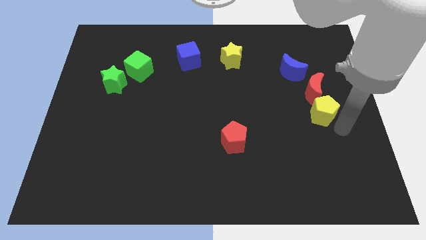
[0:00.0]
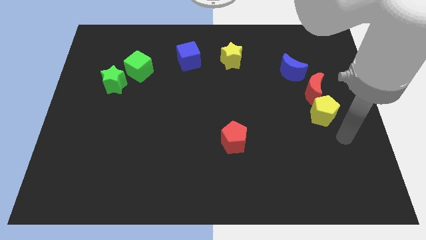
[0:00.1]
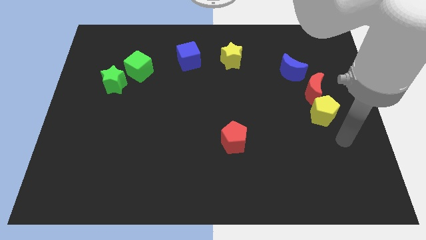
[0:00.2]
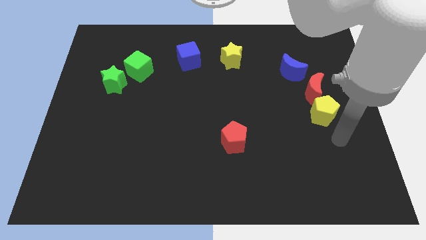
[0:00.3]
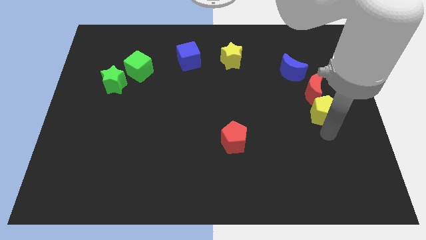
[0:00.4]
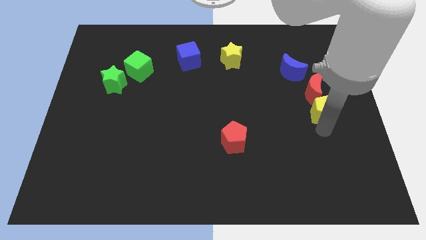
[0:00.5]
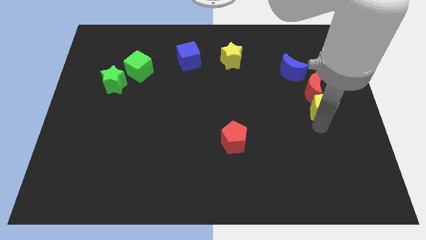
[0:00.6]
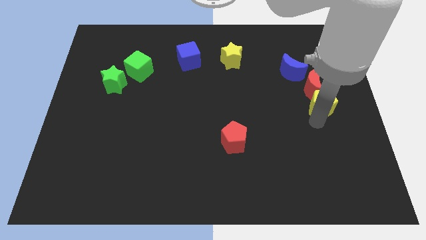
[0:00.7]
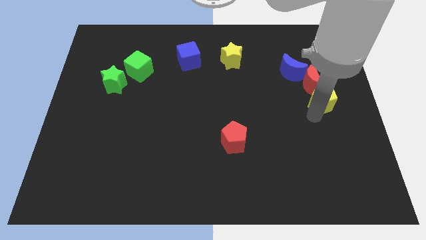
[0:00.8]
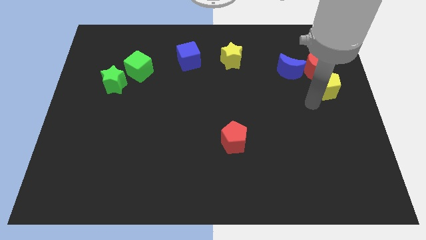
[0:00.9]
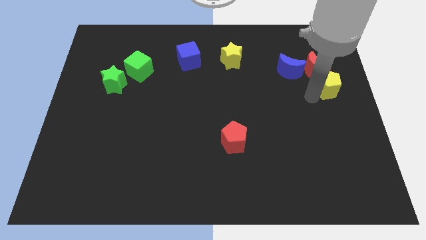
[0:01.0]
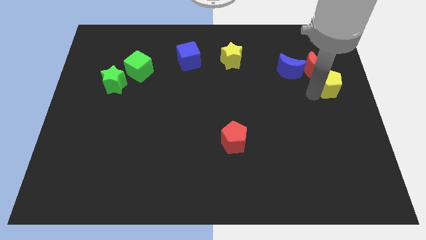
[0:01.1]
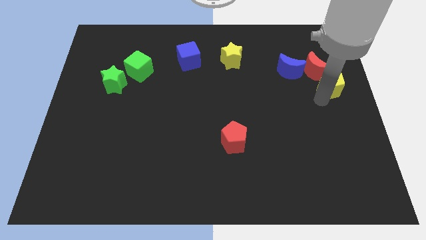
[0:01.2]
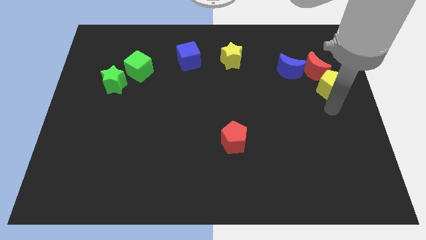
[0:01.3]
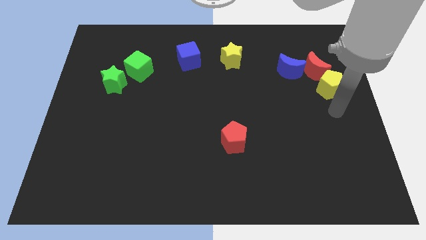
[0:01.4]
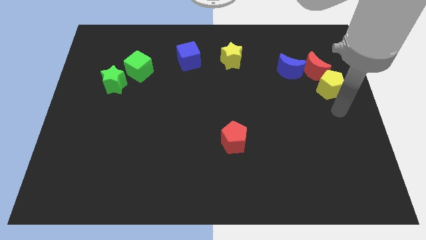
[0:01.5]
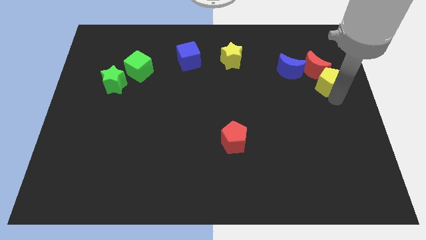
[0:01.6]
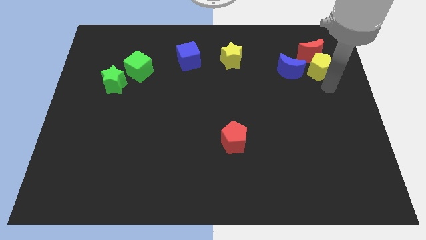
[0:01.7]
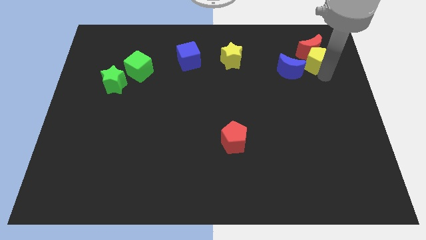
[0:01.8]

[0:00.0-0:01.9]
slide the red moon and yellow pentagon towards the top right of the board

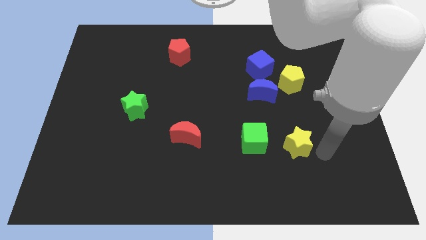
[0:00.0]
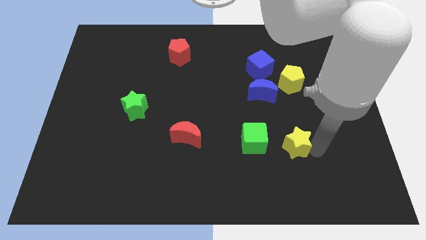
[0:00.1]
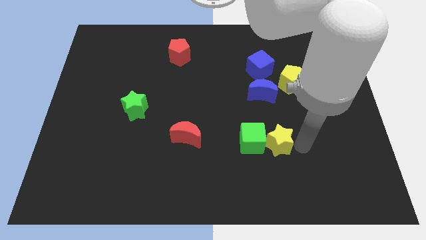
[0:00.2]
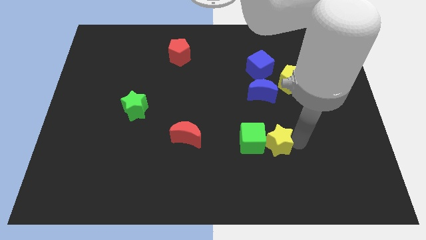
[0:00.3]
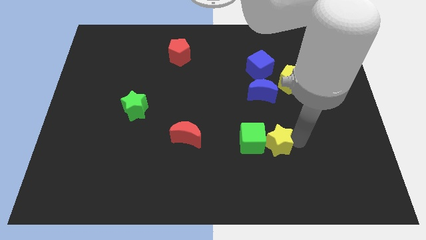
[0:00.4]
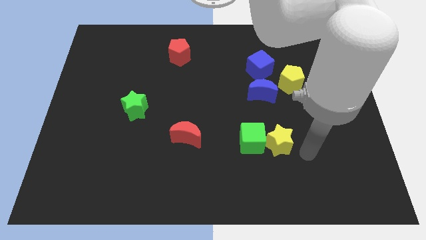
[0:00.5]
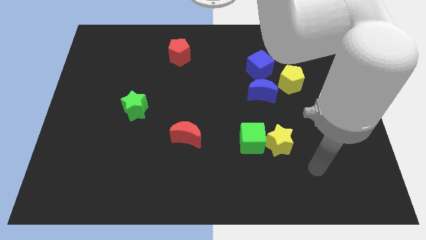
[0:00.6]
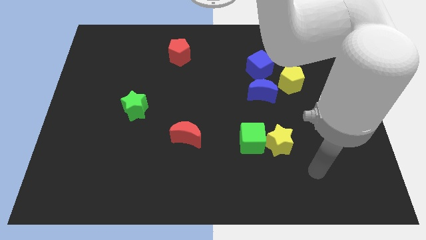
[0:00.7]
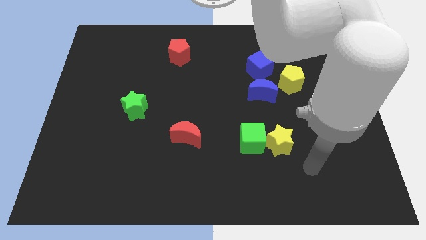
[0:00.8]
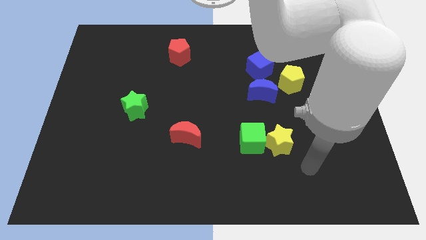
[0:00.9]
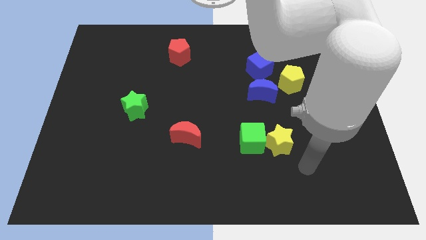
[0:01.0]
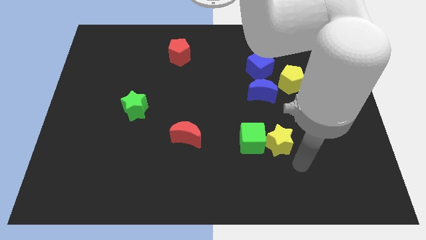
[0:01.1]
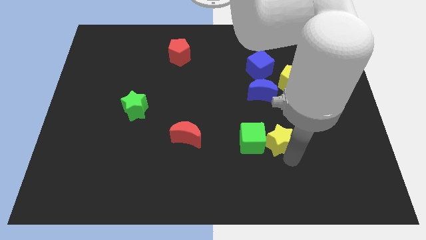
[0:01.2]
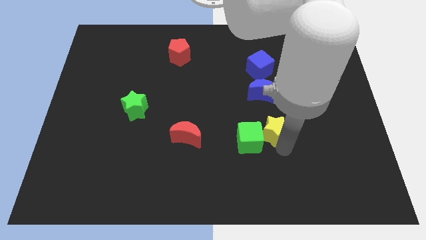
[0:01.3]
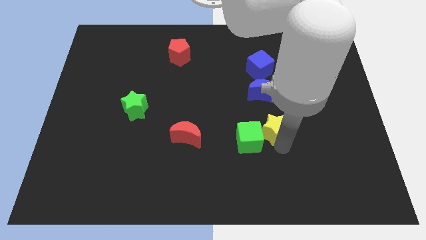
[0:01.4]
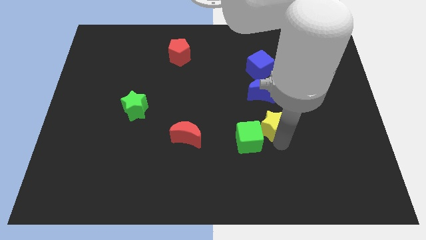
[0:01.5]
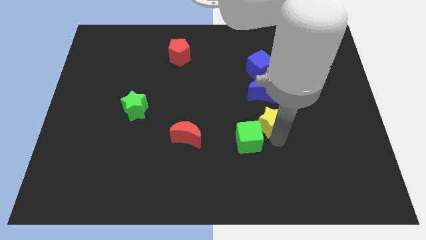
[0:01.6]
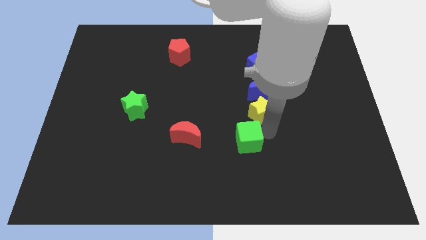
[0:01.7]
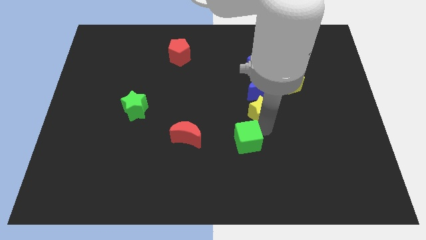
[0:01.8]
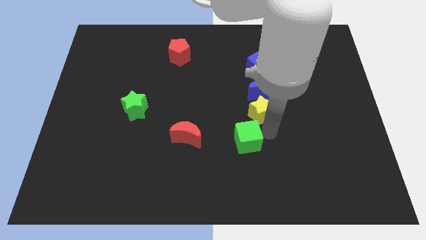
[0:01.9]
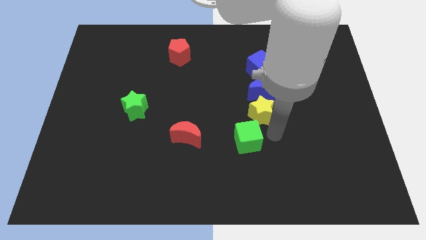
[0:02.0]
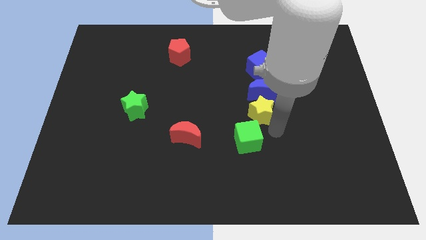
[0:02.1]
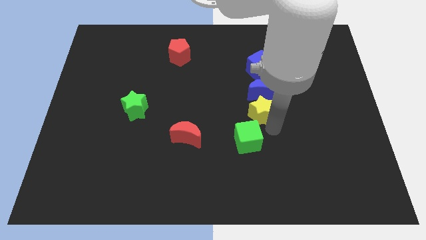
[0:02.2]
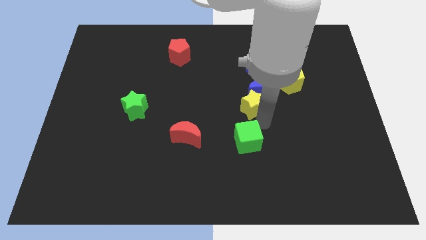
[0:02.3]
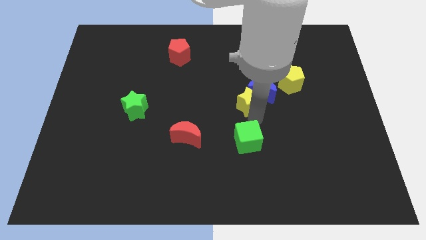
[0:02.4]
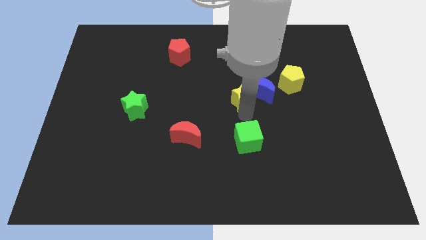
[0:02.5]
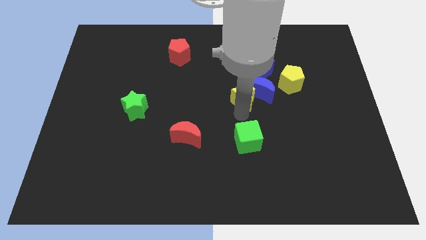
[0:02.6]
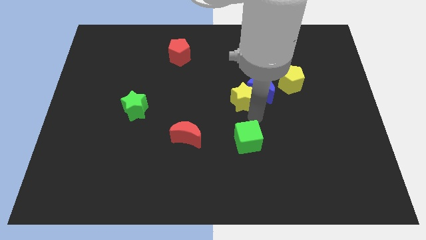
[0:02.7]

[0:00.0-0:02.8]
push yellow star above green cube

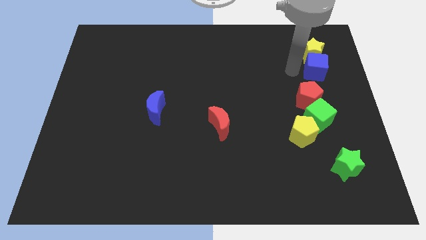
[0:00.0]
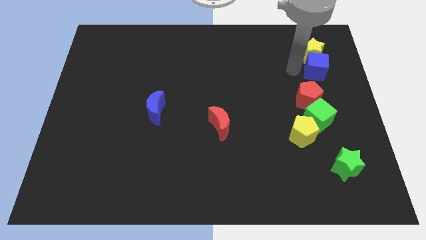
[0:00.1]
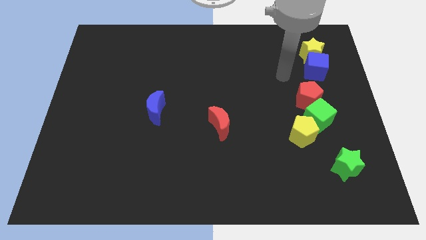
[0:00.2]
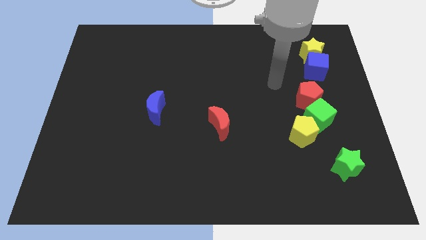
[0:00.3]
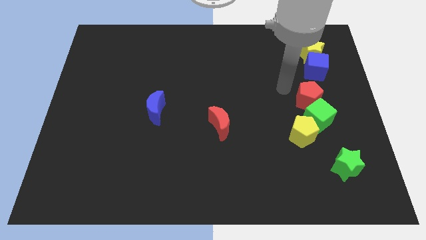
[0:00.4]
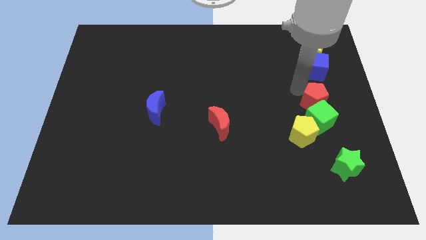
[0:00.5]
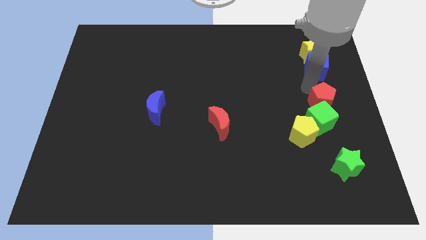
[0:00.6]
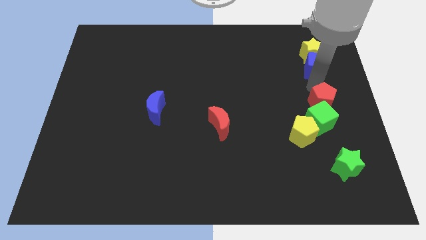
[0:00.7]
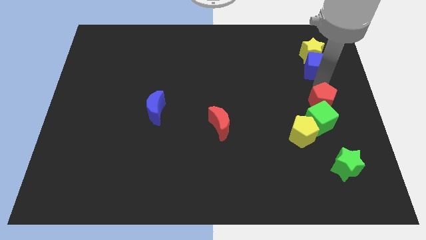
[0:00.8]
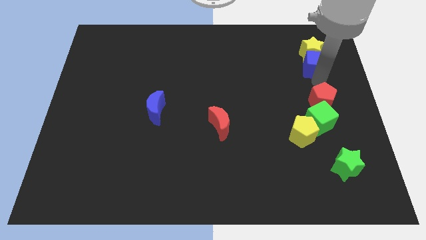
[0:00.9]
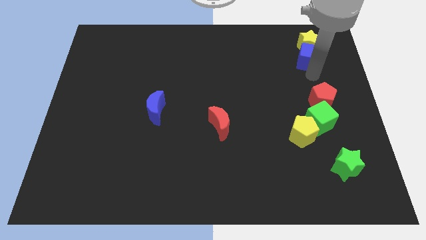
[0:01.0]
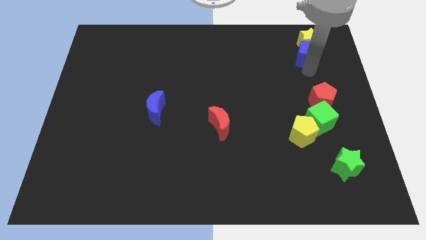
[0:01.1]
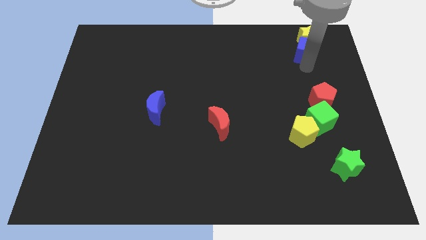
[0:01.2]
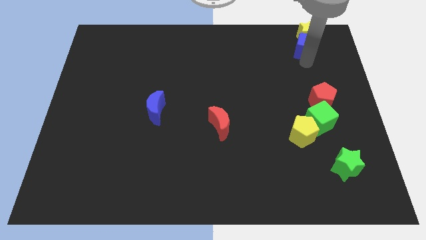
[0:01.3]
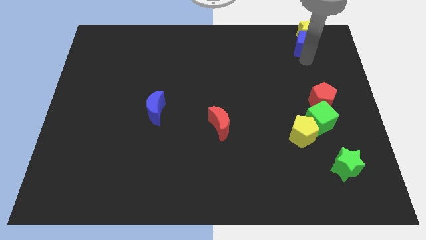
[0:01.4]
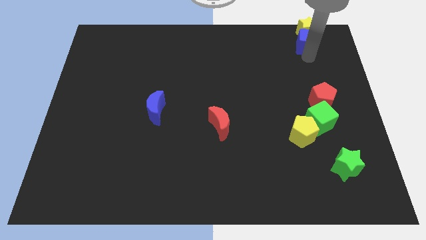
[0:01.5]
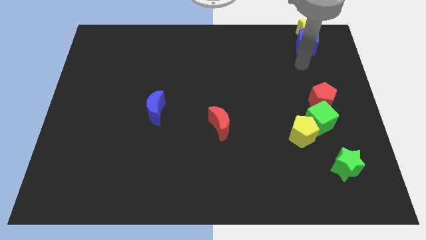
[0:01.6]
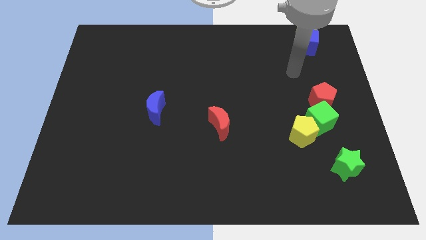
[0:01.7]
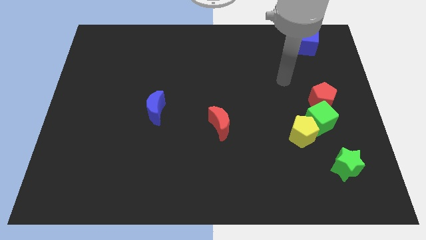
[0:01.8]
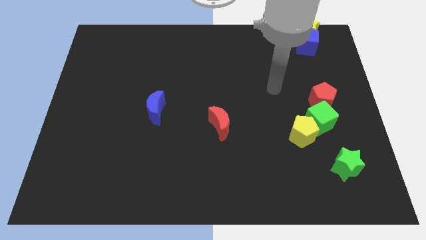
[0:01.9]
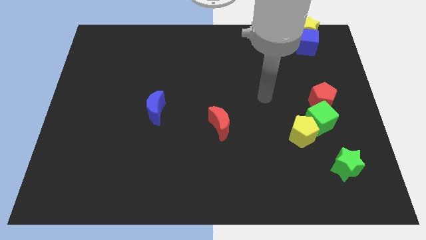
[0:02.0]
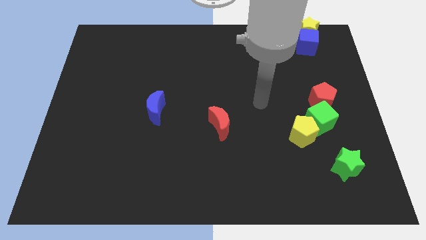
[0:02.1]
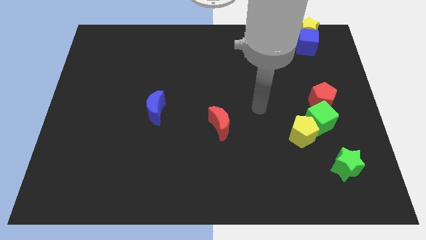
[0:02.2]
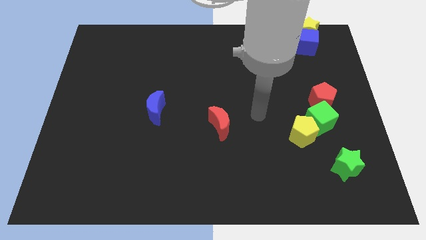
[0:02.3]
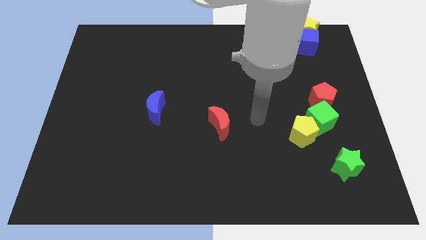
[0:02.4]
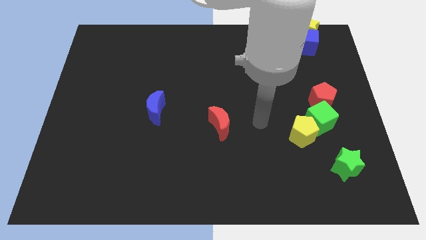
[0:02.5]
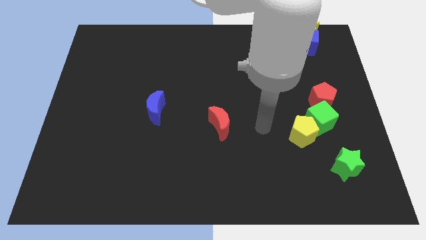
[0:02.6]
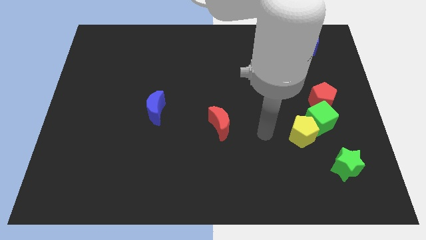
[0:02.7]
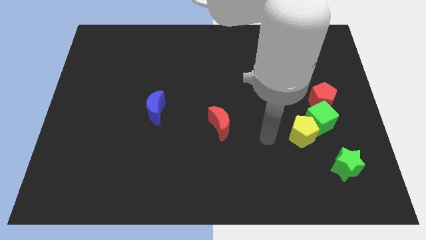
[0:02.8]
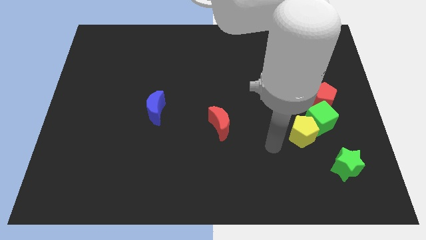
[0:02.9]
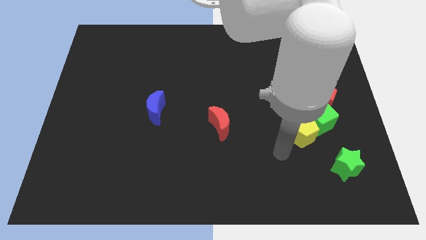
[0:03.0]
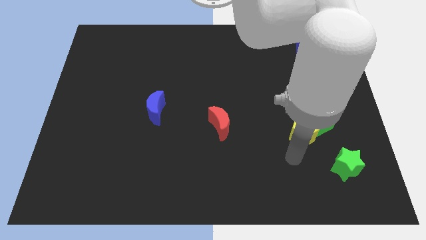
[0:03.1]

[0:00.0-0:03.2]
push the blue cube with yellow star to the top right

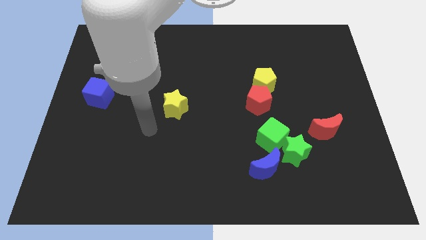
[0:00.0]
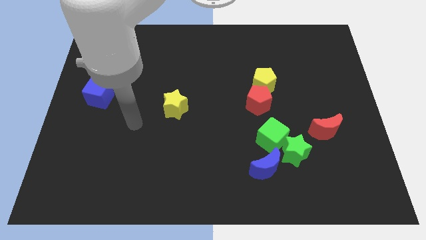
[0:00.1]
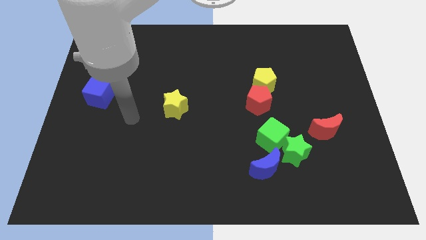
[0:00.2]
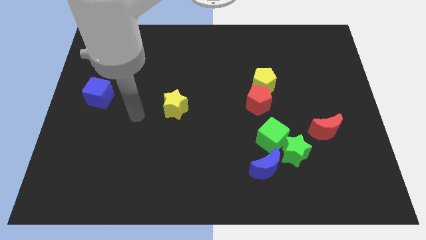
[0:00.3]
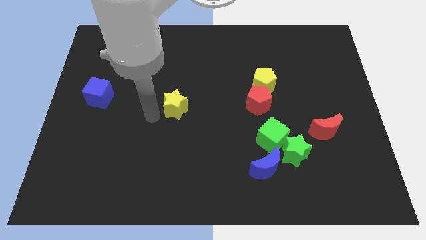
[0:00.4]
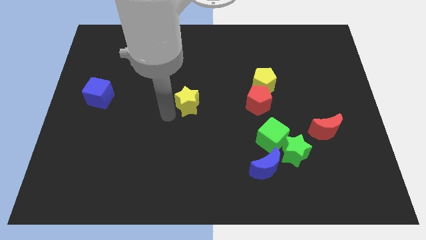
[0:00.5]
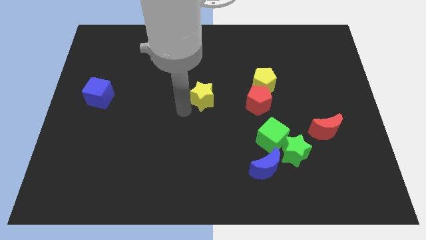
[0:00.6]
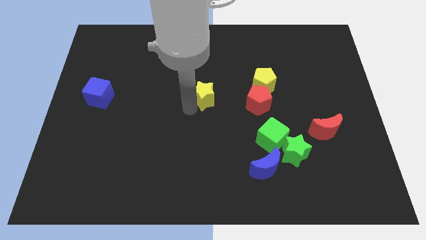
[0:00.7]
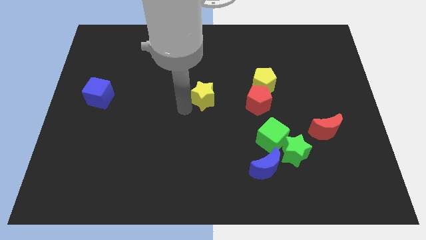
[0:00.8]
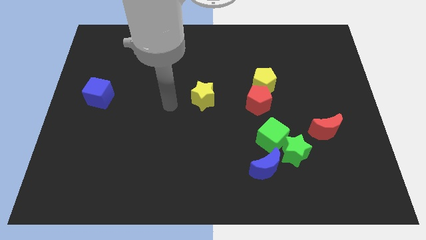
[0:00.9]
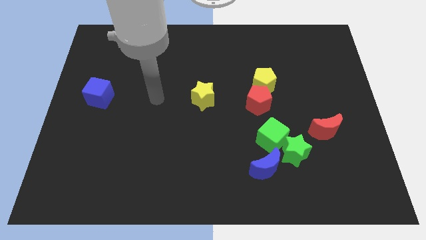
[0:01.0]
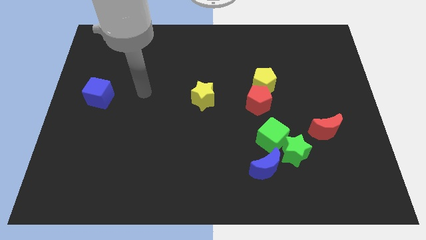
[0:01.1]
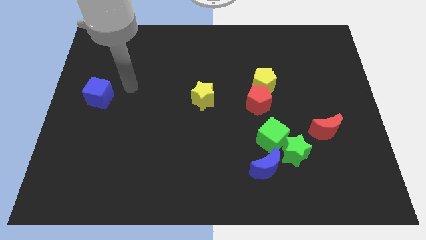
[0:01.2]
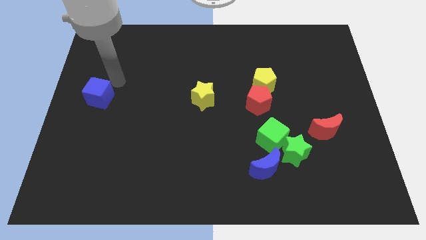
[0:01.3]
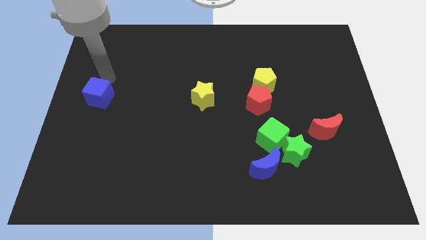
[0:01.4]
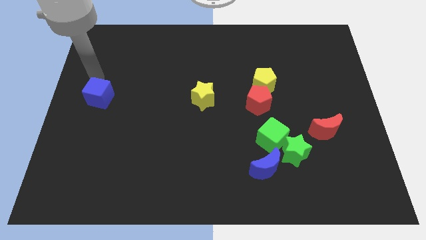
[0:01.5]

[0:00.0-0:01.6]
move the yellow star towards the right
